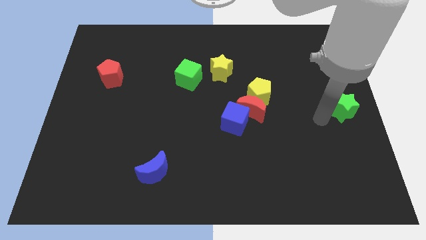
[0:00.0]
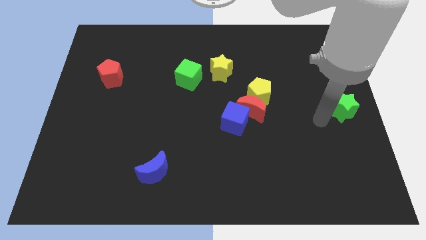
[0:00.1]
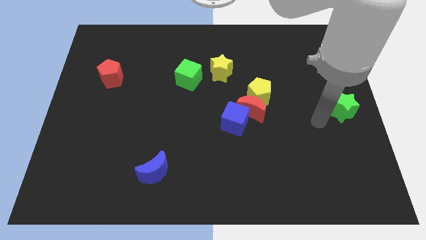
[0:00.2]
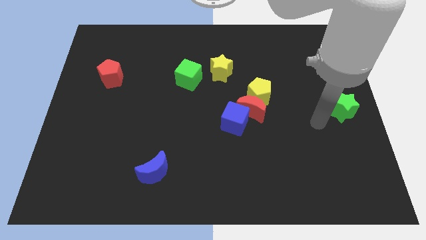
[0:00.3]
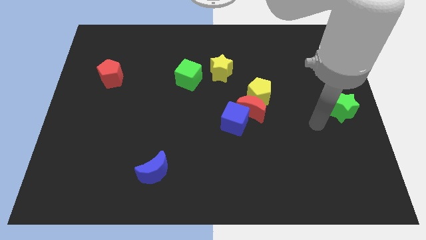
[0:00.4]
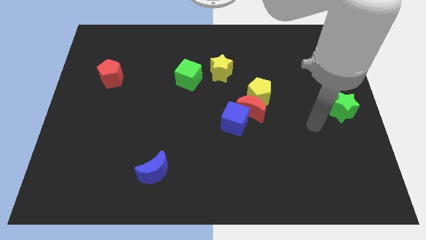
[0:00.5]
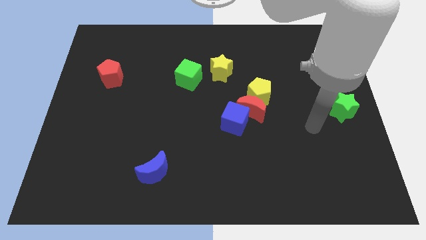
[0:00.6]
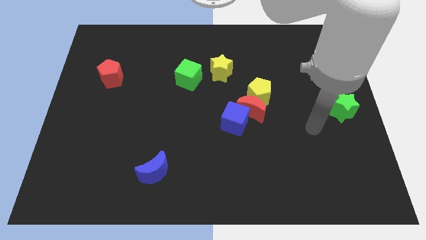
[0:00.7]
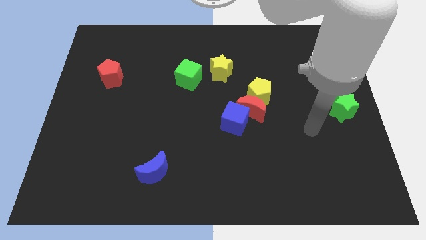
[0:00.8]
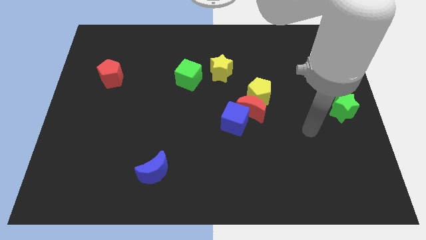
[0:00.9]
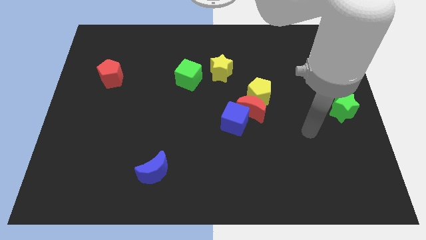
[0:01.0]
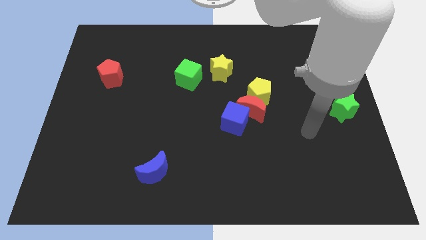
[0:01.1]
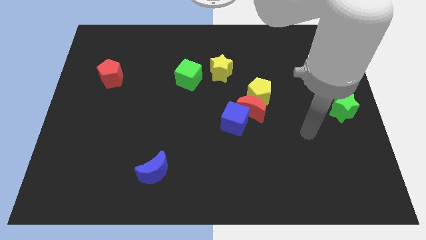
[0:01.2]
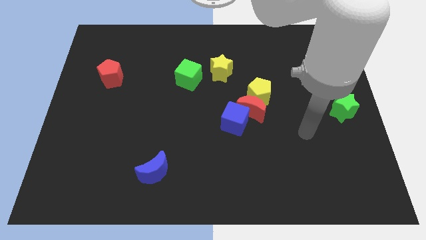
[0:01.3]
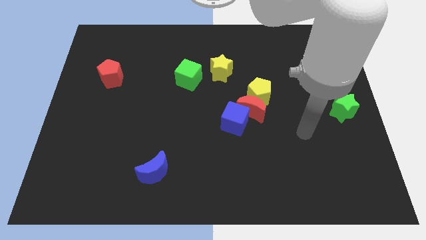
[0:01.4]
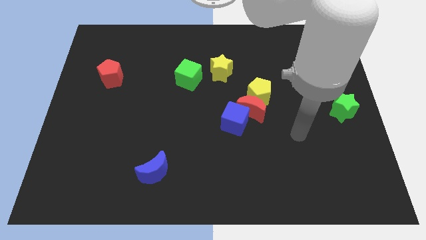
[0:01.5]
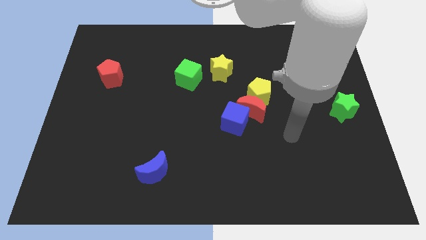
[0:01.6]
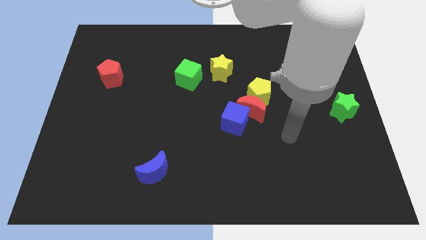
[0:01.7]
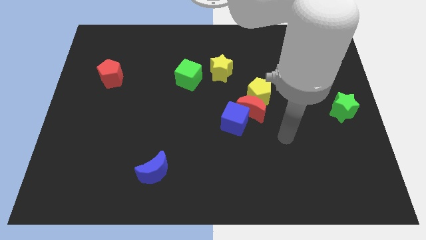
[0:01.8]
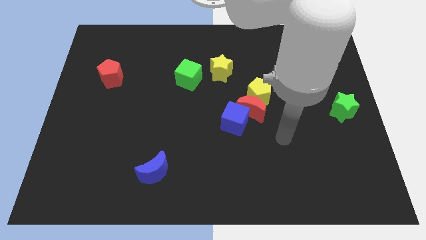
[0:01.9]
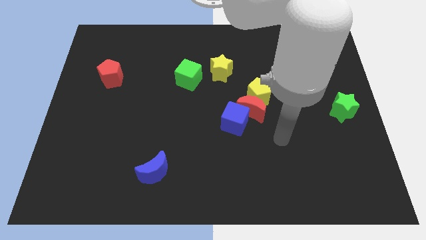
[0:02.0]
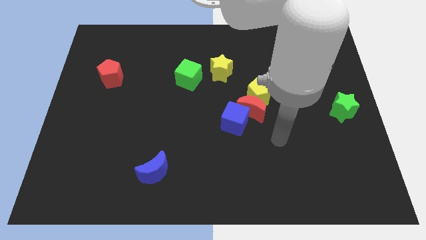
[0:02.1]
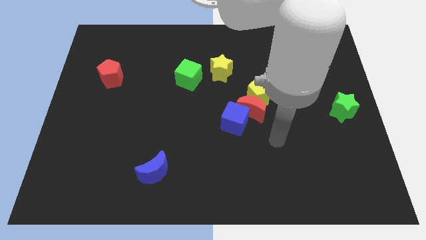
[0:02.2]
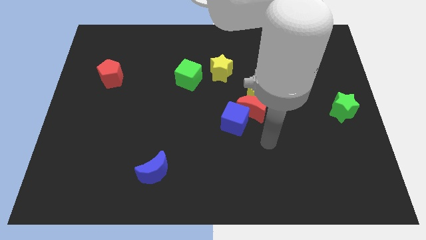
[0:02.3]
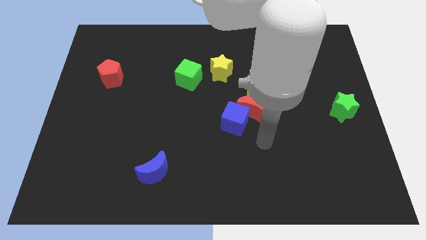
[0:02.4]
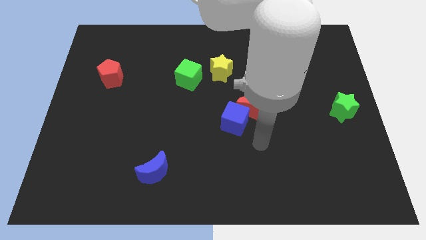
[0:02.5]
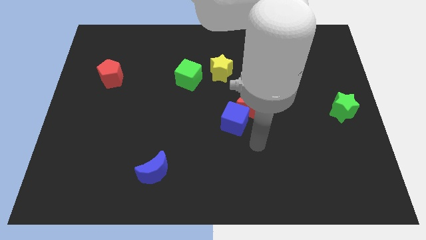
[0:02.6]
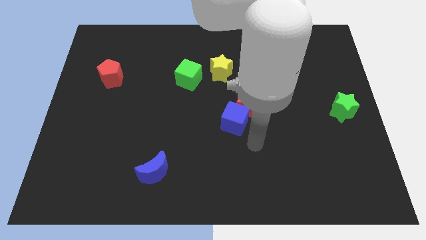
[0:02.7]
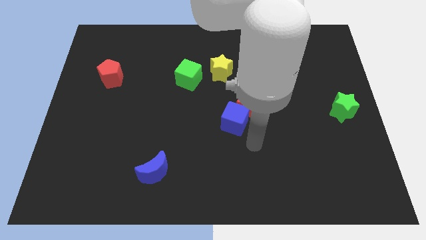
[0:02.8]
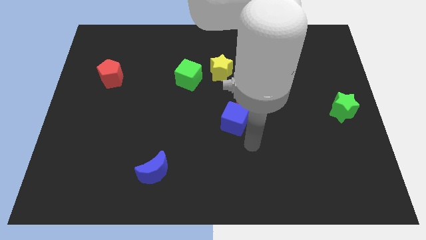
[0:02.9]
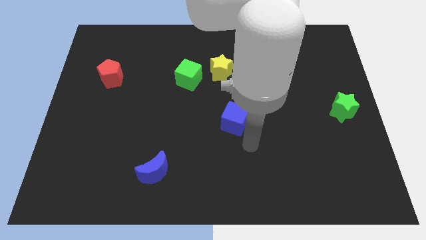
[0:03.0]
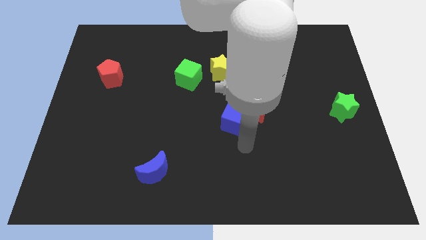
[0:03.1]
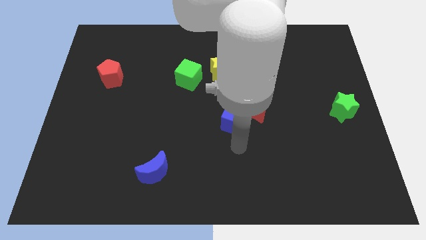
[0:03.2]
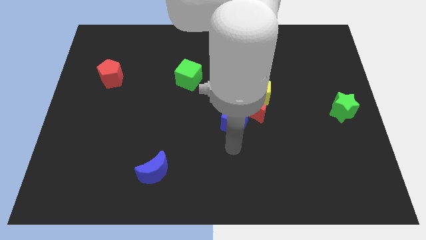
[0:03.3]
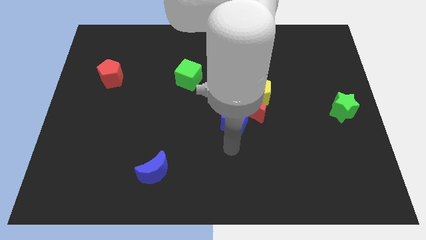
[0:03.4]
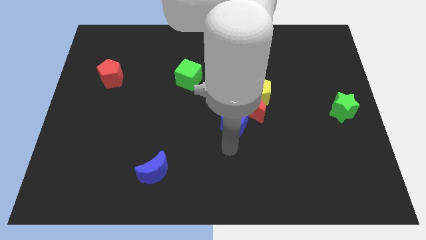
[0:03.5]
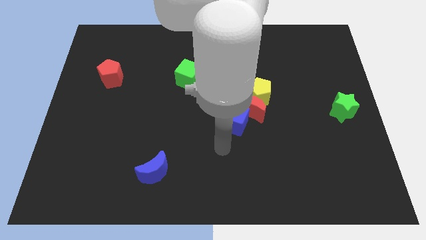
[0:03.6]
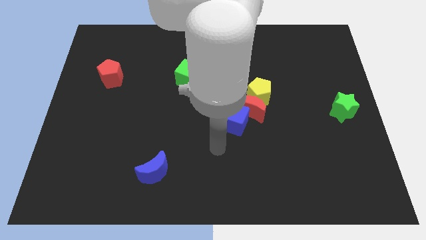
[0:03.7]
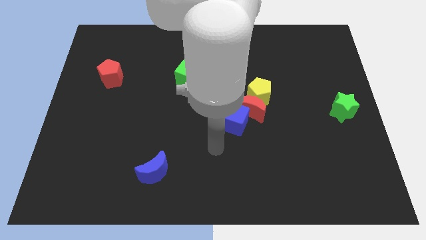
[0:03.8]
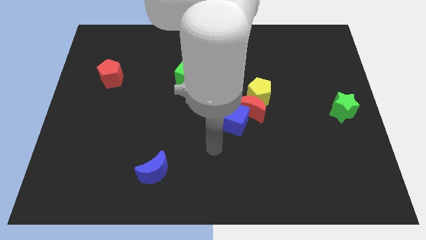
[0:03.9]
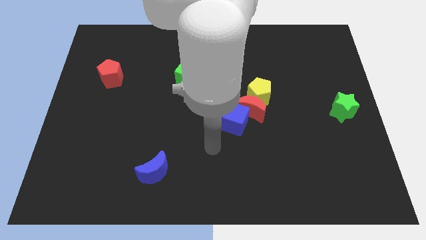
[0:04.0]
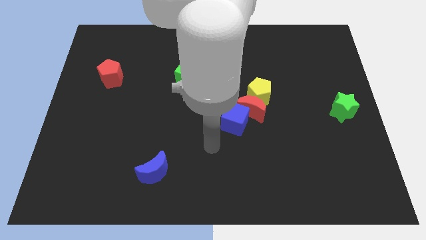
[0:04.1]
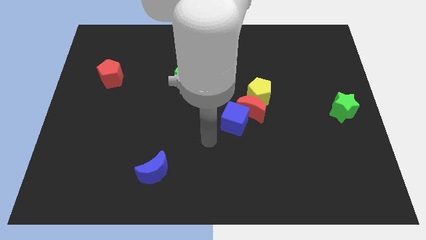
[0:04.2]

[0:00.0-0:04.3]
move your arm in between the blue moon and blue cube

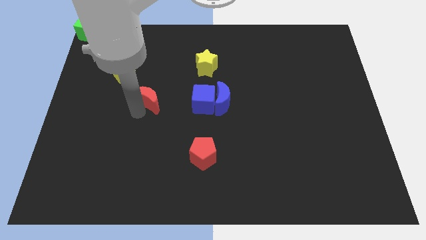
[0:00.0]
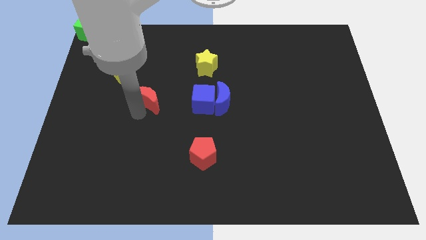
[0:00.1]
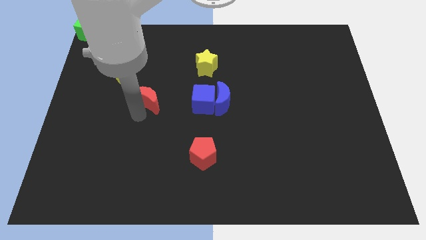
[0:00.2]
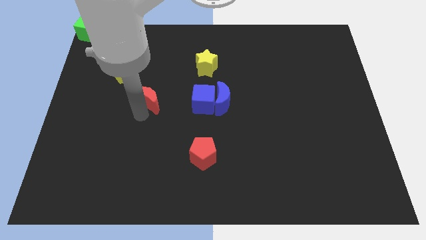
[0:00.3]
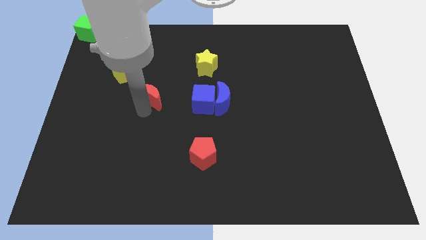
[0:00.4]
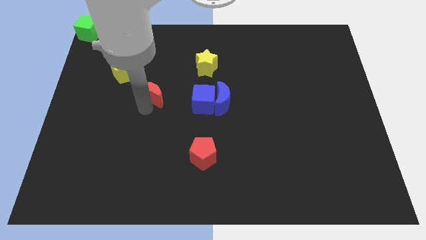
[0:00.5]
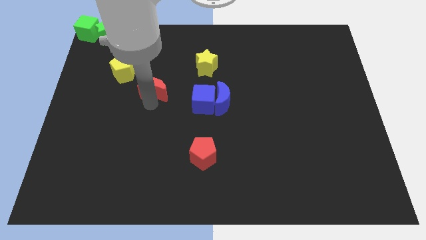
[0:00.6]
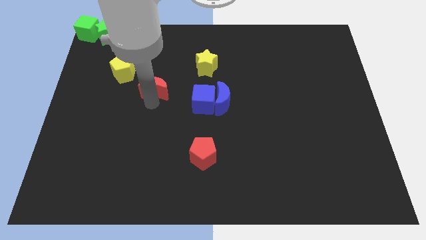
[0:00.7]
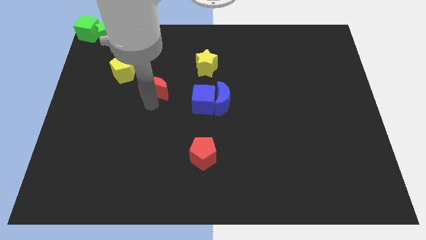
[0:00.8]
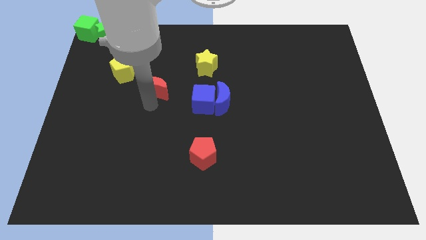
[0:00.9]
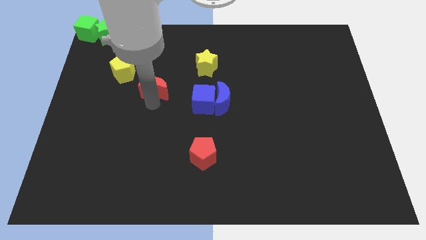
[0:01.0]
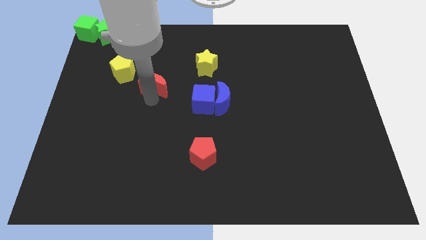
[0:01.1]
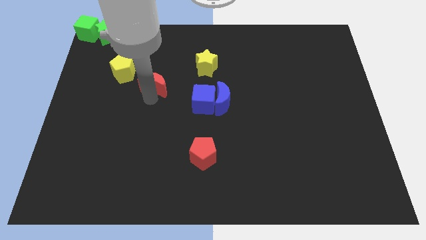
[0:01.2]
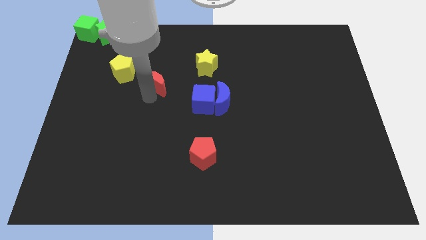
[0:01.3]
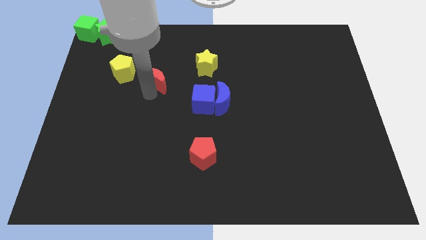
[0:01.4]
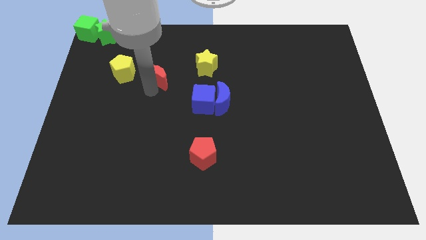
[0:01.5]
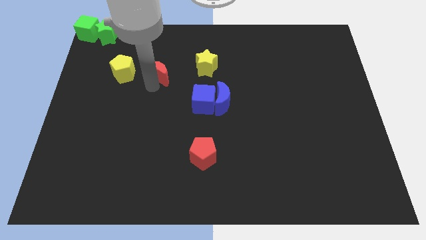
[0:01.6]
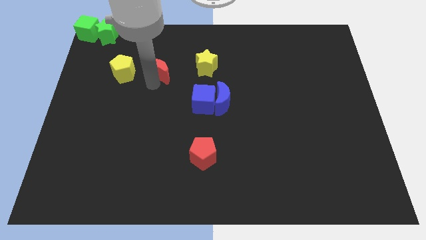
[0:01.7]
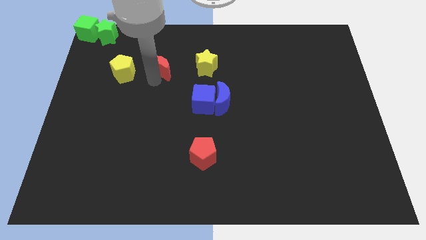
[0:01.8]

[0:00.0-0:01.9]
slide the red moon to the right of the yellow pentagon

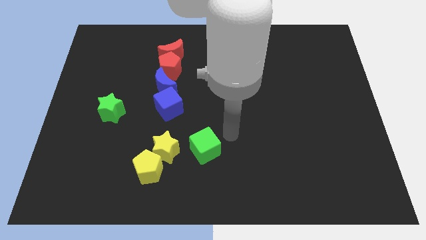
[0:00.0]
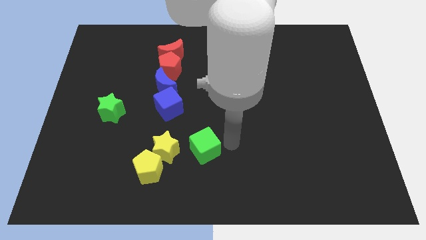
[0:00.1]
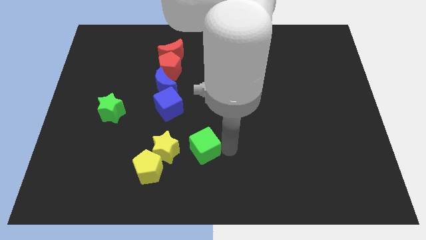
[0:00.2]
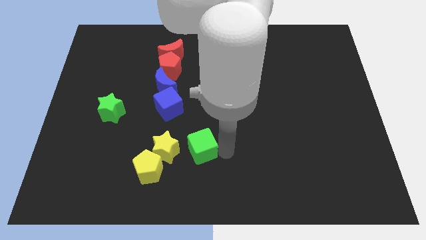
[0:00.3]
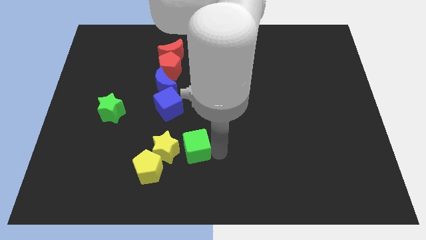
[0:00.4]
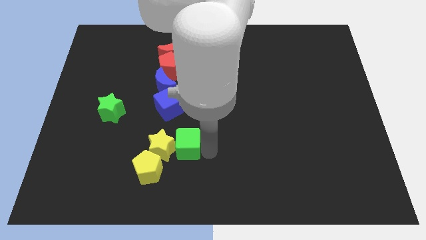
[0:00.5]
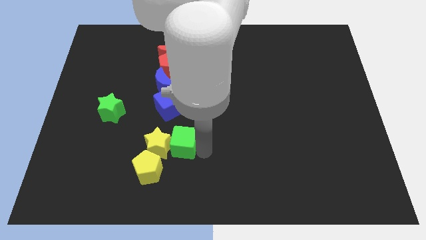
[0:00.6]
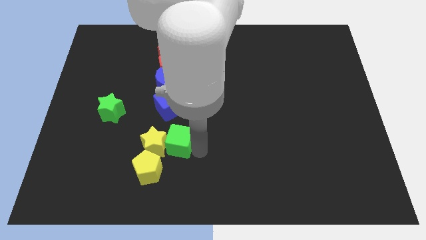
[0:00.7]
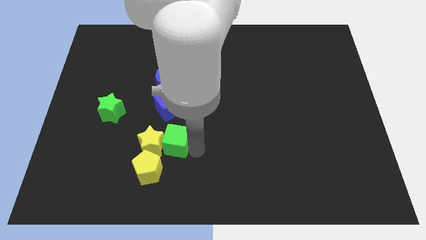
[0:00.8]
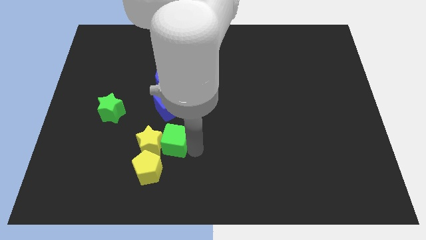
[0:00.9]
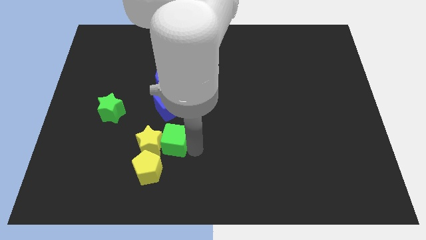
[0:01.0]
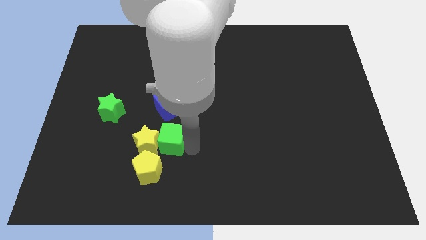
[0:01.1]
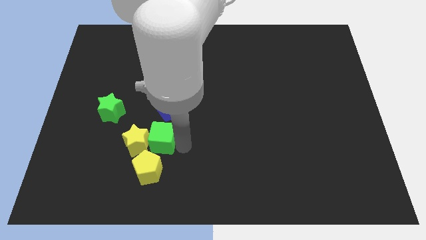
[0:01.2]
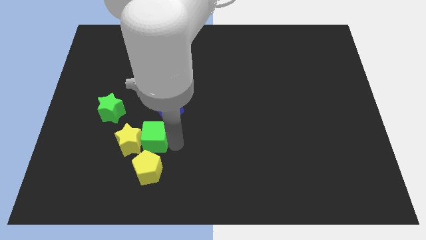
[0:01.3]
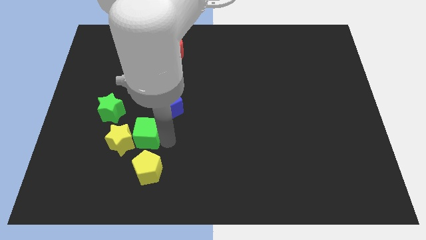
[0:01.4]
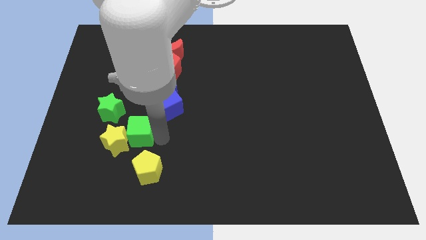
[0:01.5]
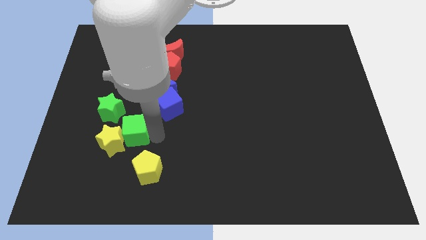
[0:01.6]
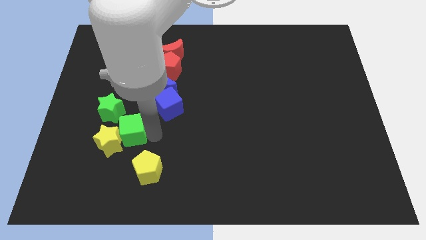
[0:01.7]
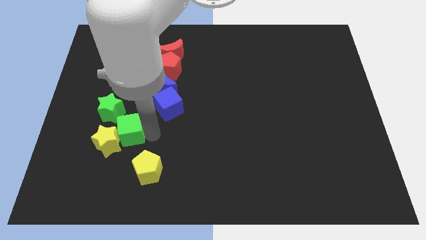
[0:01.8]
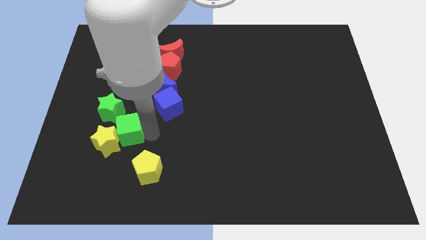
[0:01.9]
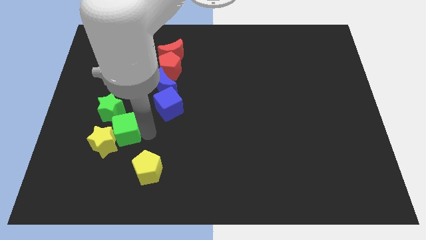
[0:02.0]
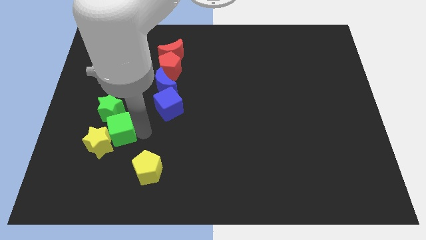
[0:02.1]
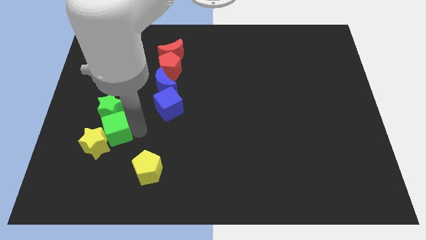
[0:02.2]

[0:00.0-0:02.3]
push the green cube and yellow star towards left side

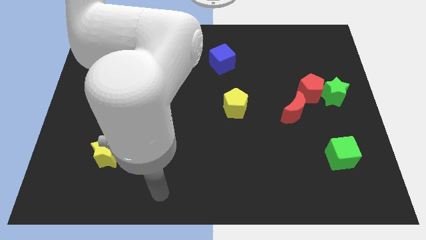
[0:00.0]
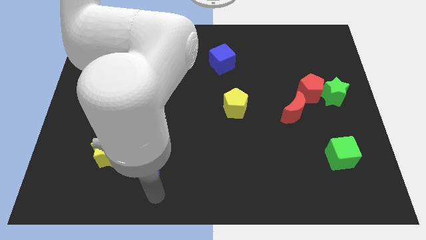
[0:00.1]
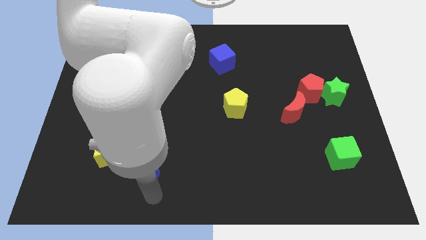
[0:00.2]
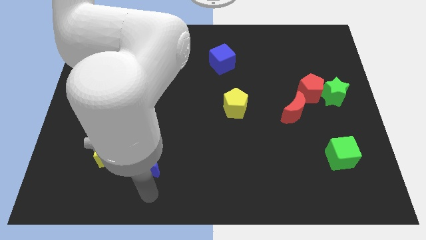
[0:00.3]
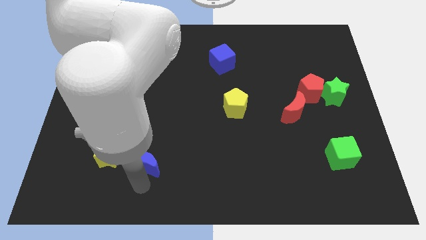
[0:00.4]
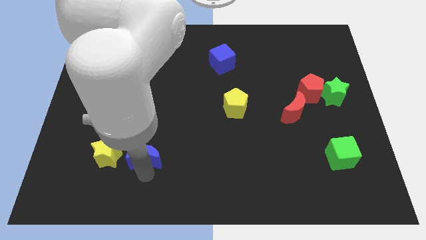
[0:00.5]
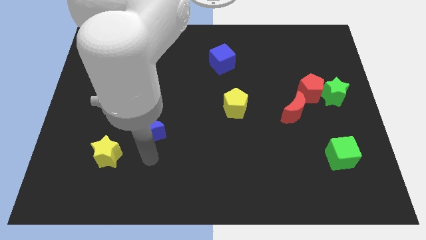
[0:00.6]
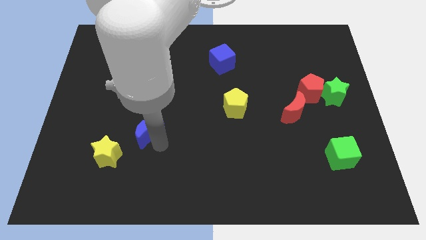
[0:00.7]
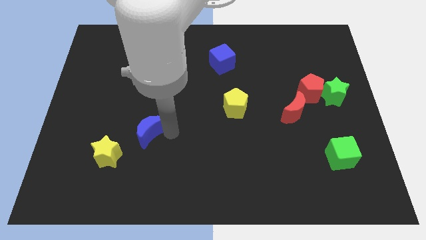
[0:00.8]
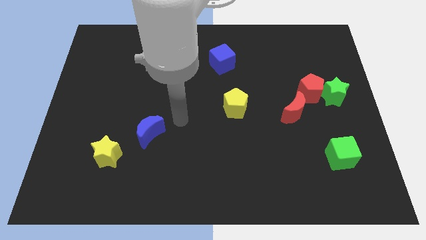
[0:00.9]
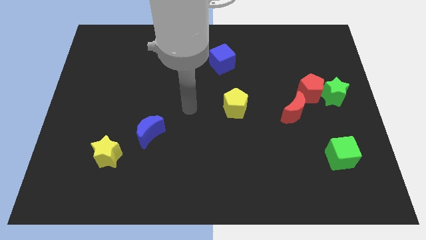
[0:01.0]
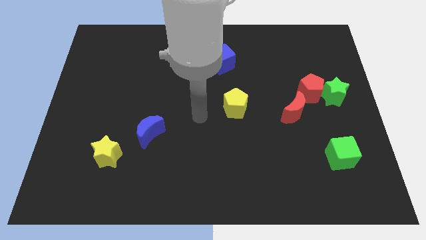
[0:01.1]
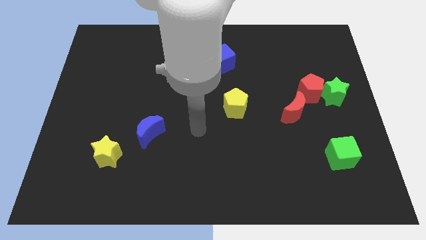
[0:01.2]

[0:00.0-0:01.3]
push blue crescent slightly towards upwards
